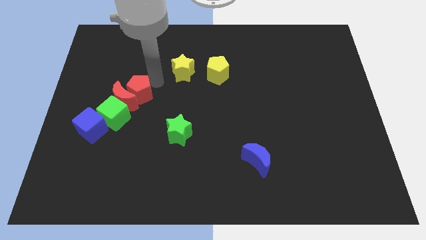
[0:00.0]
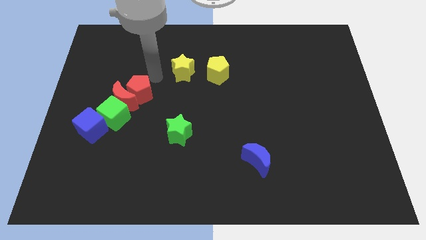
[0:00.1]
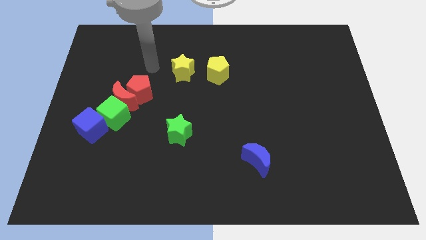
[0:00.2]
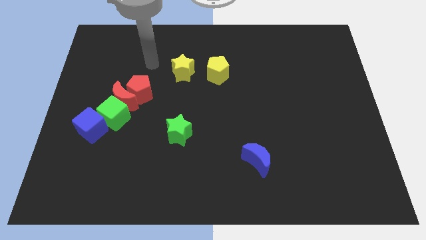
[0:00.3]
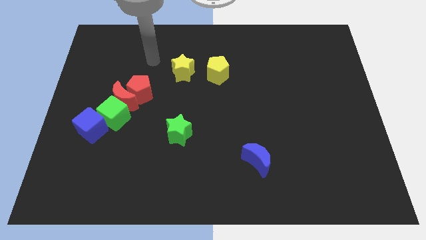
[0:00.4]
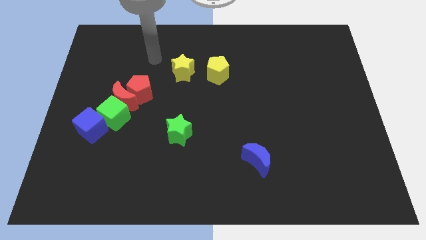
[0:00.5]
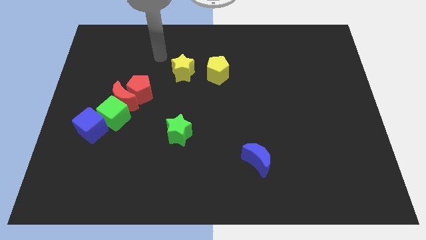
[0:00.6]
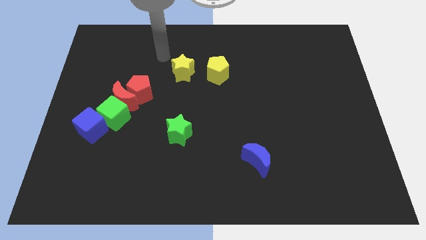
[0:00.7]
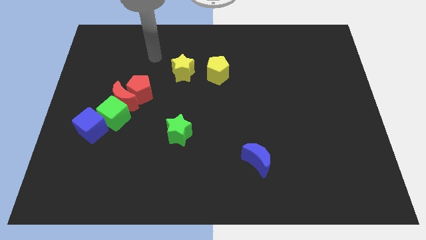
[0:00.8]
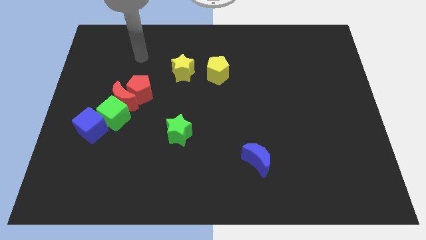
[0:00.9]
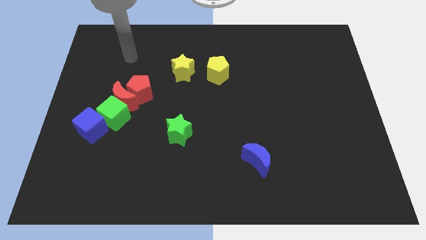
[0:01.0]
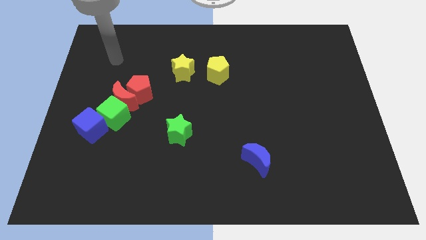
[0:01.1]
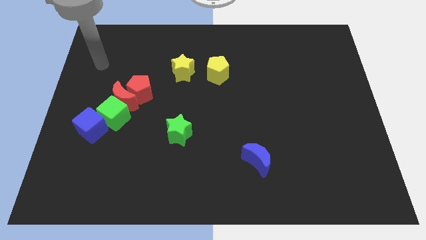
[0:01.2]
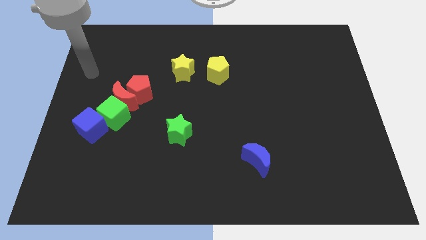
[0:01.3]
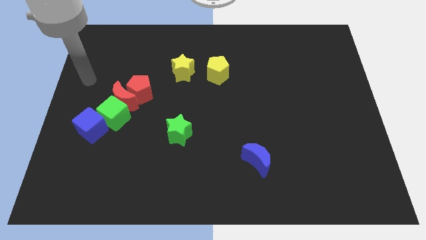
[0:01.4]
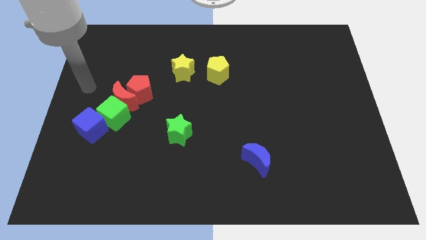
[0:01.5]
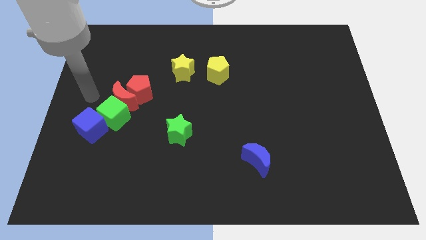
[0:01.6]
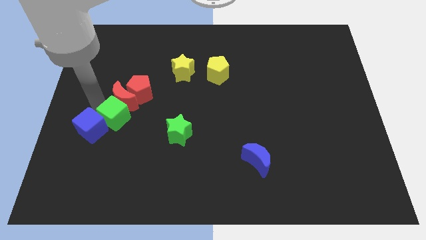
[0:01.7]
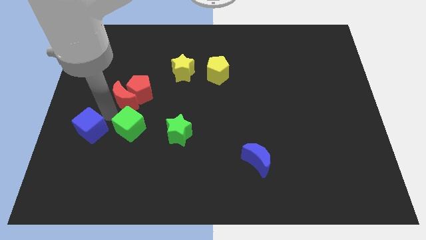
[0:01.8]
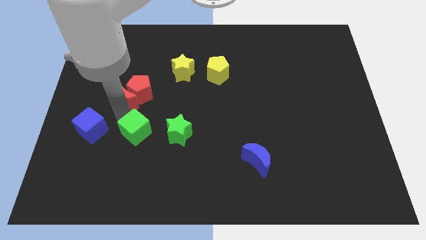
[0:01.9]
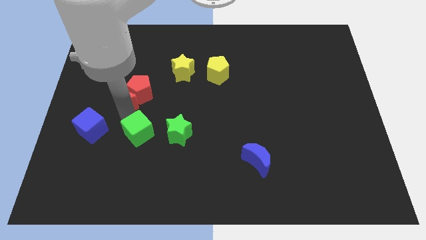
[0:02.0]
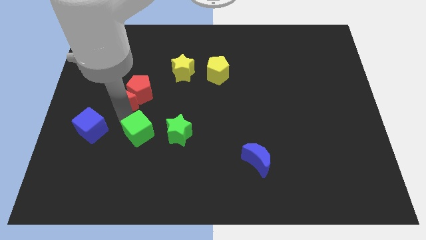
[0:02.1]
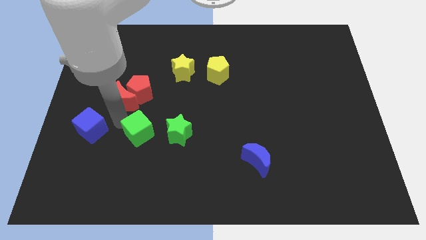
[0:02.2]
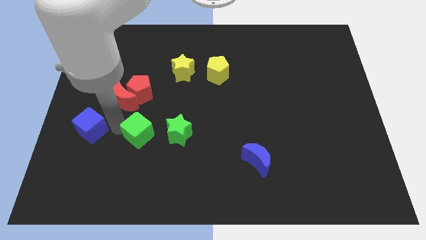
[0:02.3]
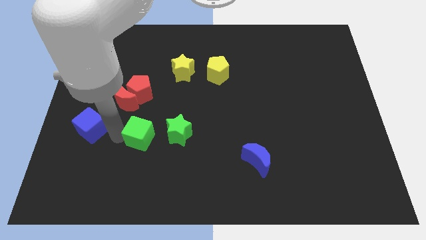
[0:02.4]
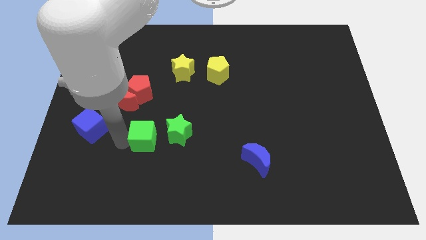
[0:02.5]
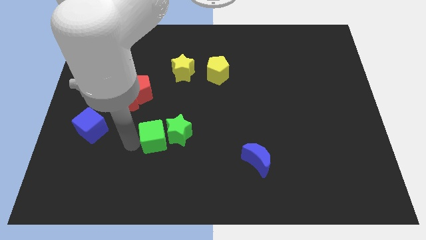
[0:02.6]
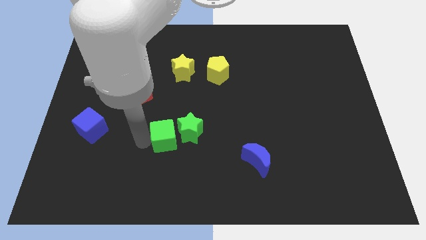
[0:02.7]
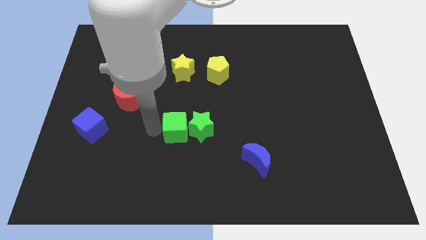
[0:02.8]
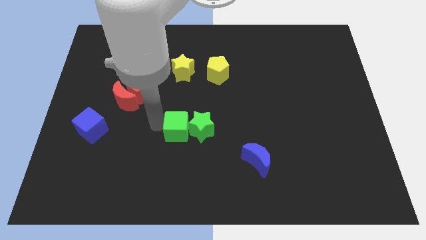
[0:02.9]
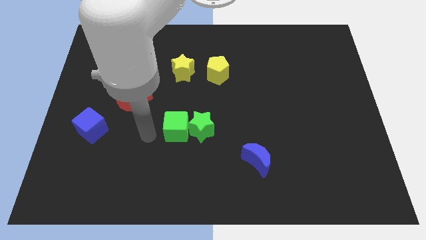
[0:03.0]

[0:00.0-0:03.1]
push the green cube into the left side of the green star

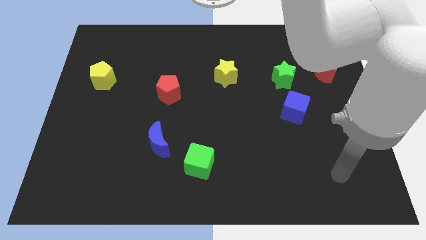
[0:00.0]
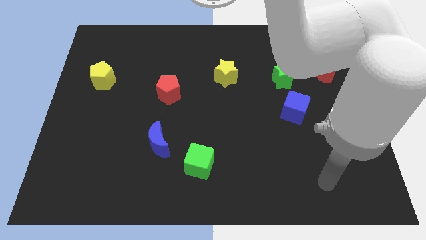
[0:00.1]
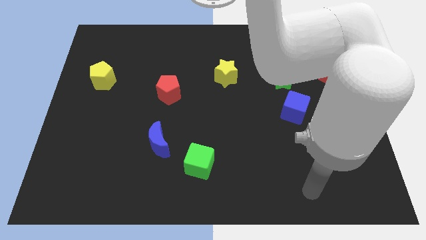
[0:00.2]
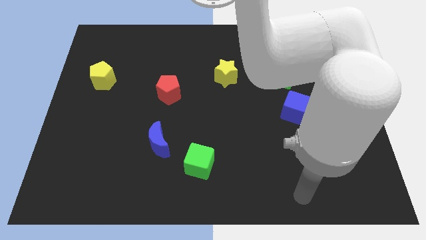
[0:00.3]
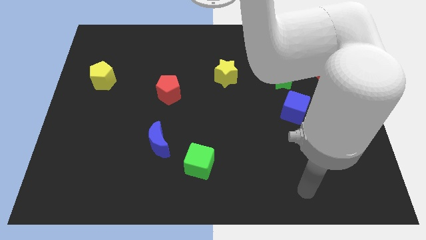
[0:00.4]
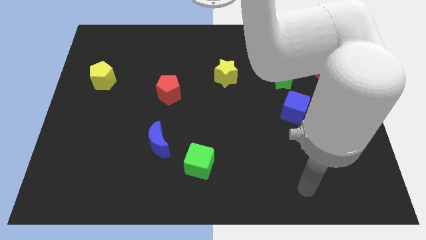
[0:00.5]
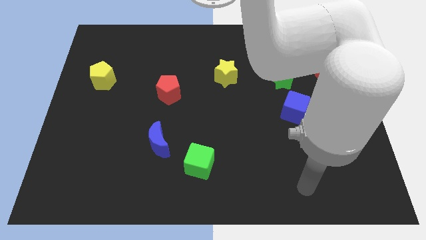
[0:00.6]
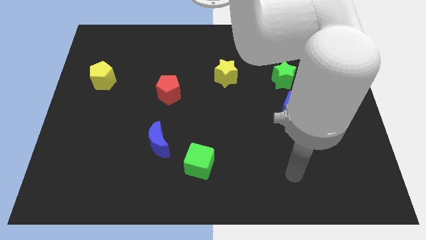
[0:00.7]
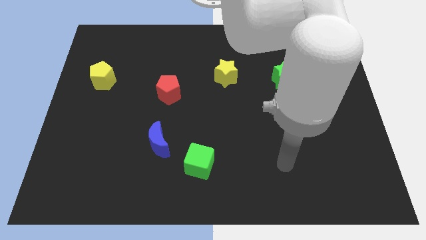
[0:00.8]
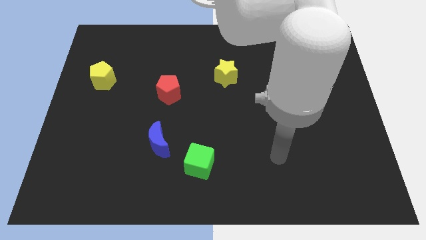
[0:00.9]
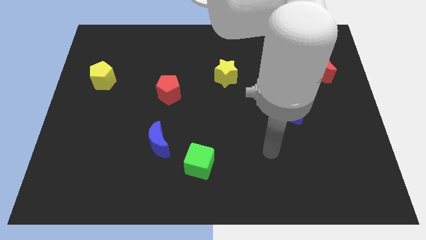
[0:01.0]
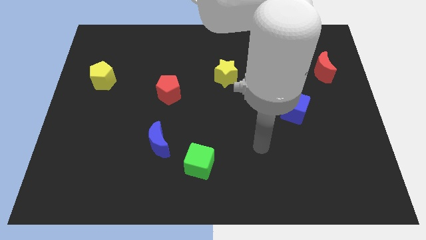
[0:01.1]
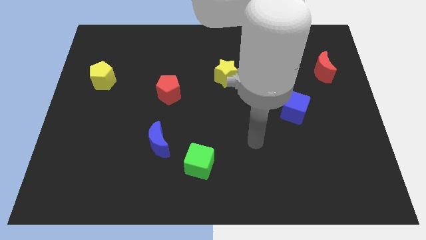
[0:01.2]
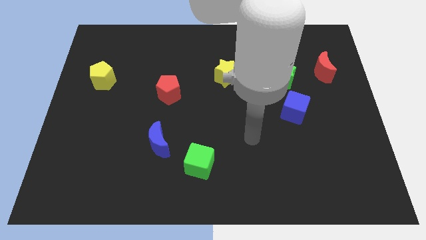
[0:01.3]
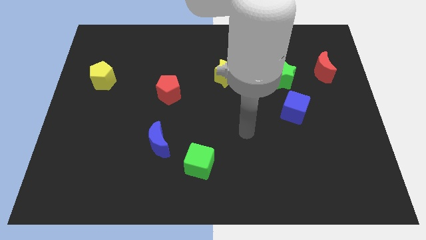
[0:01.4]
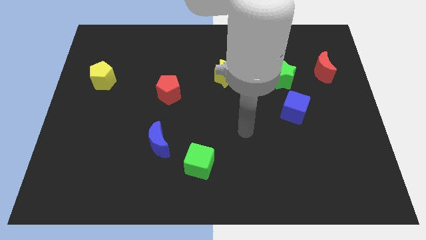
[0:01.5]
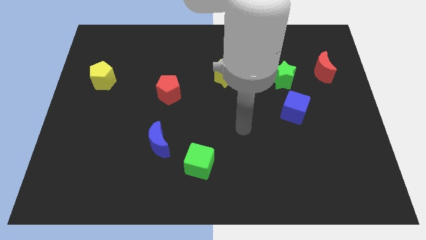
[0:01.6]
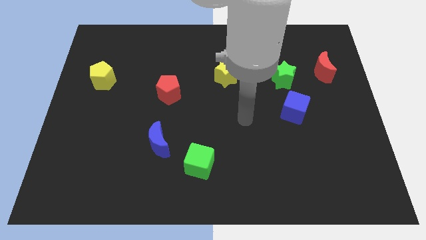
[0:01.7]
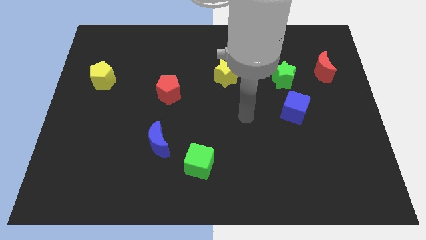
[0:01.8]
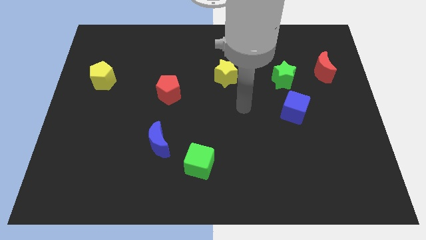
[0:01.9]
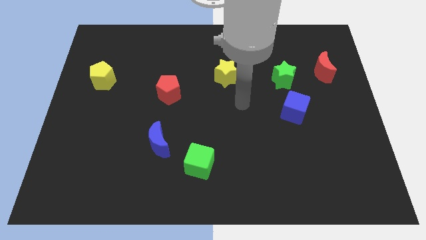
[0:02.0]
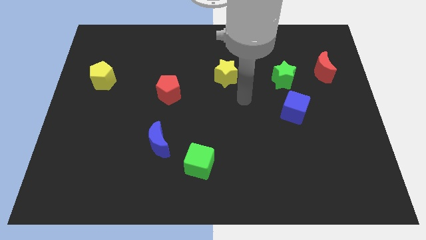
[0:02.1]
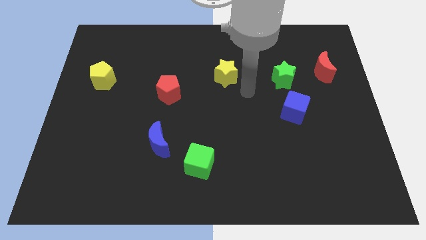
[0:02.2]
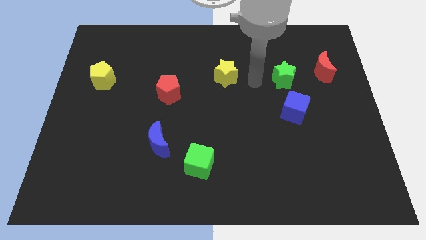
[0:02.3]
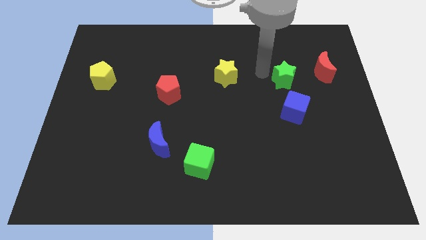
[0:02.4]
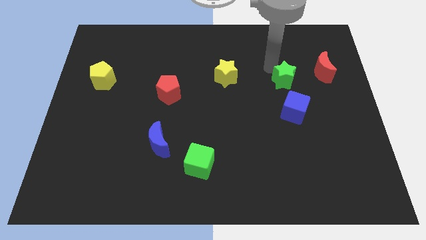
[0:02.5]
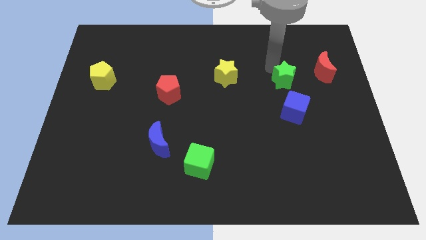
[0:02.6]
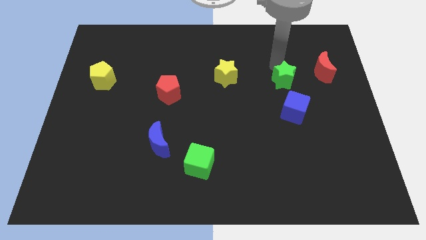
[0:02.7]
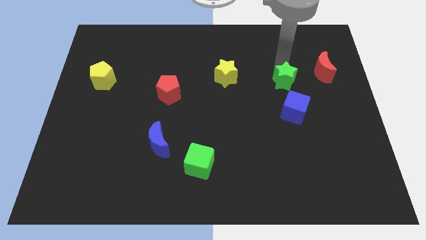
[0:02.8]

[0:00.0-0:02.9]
point your arm to the top of the green star

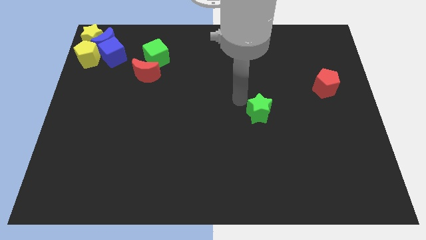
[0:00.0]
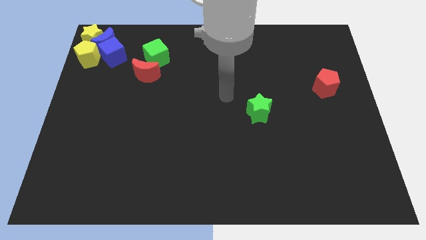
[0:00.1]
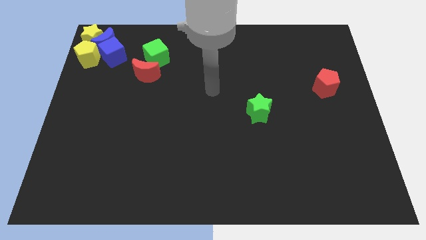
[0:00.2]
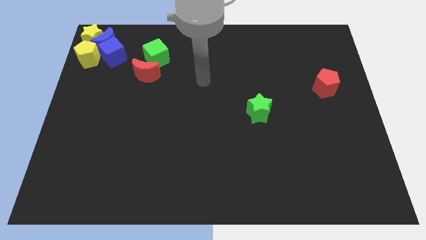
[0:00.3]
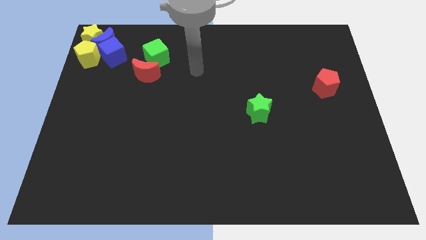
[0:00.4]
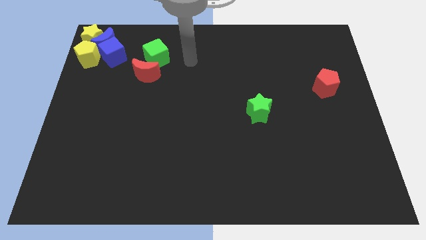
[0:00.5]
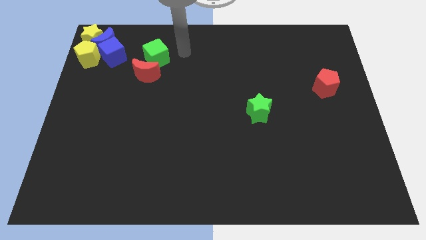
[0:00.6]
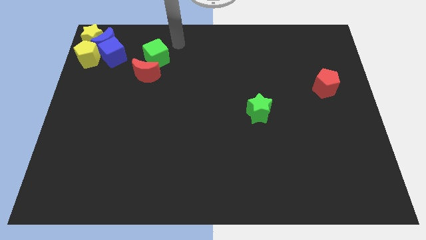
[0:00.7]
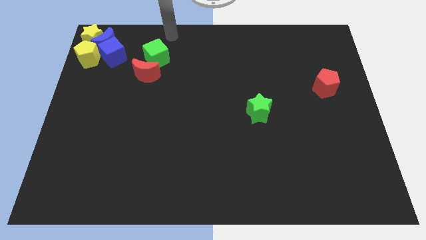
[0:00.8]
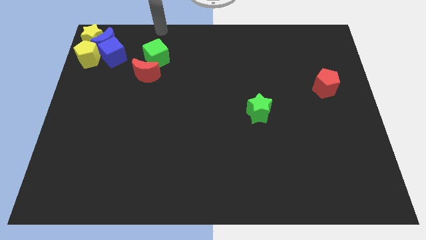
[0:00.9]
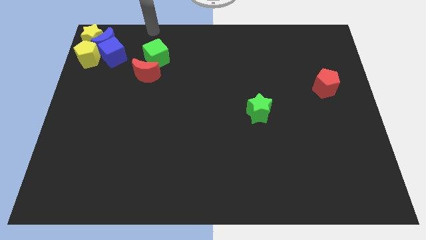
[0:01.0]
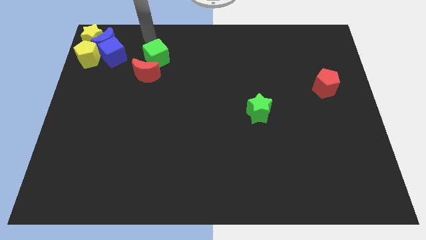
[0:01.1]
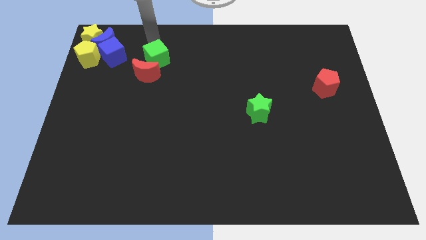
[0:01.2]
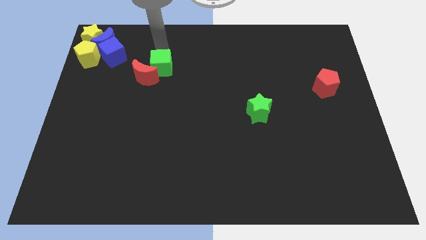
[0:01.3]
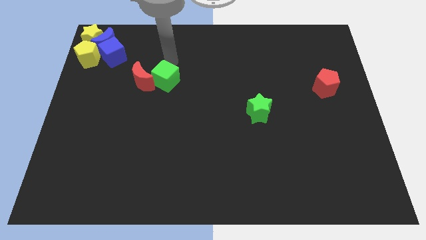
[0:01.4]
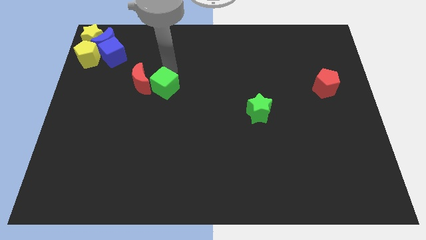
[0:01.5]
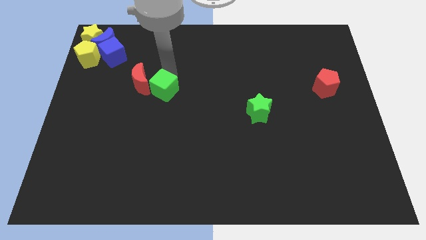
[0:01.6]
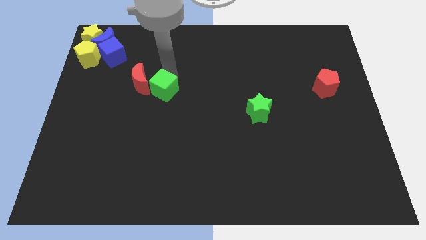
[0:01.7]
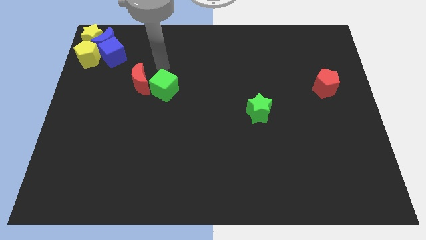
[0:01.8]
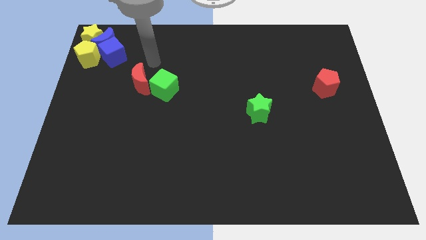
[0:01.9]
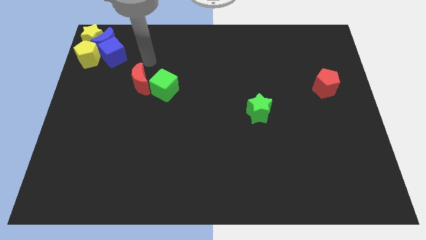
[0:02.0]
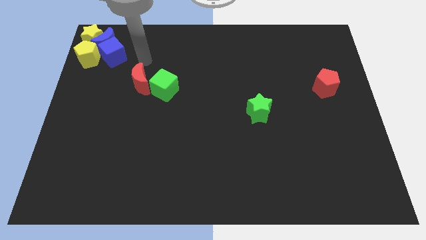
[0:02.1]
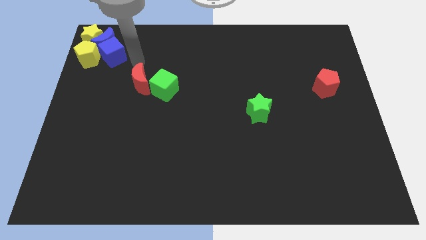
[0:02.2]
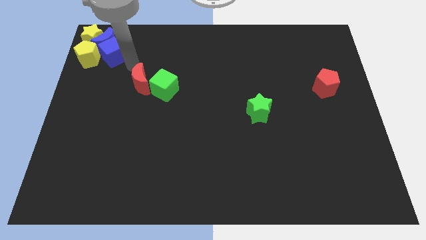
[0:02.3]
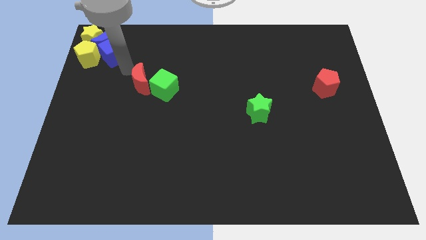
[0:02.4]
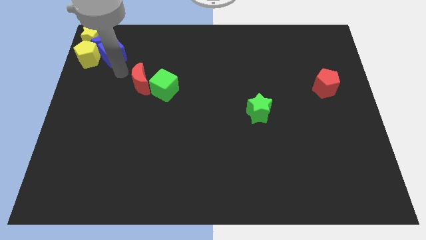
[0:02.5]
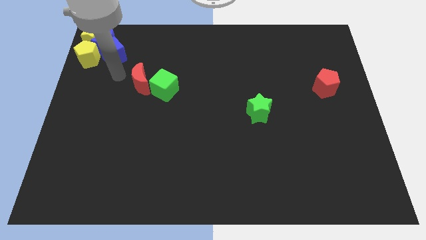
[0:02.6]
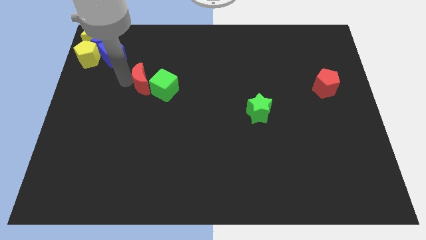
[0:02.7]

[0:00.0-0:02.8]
drag the green cube with red crescent slightly downwards
